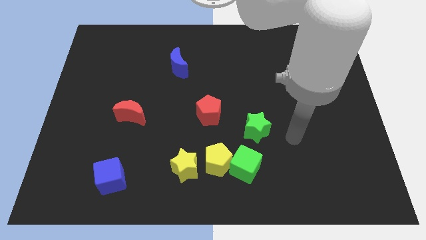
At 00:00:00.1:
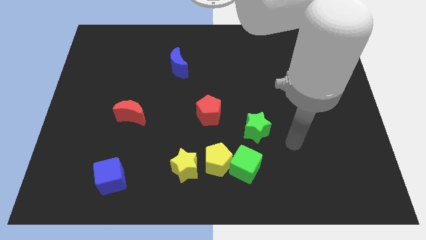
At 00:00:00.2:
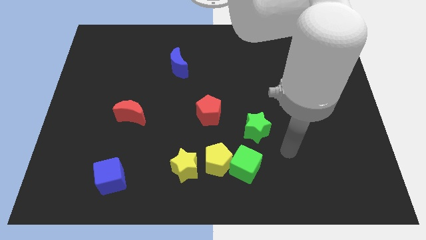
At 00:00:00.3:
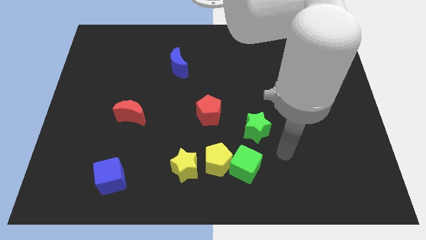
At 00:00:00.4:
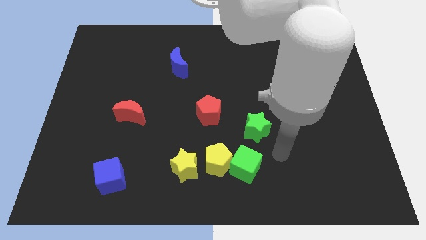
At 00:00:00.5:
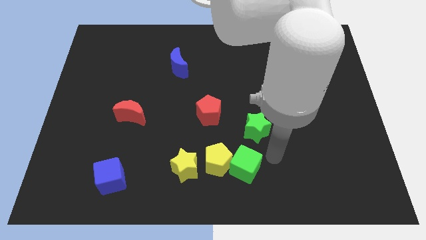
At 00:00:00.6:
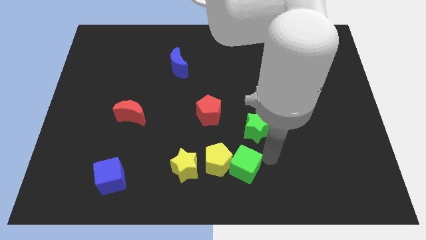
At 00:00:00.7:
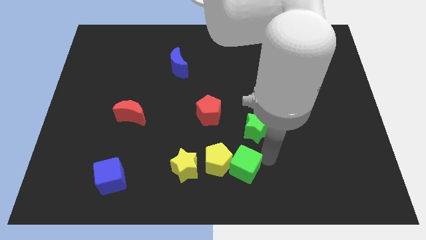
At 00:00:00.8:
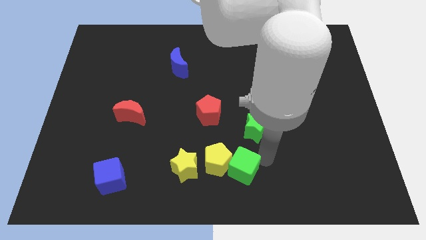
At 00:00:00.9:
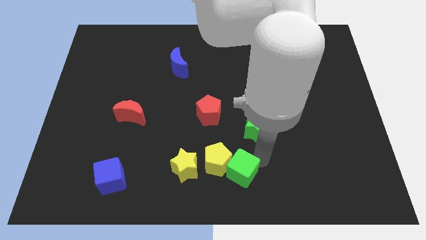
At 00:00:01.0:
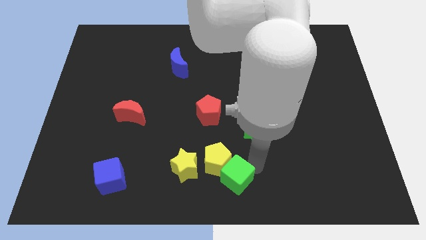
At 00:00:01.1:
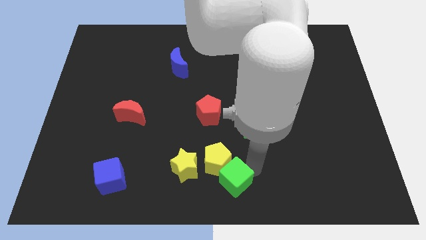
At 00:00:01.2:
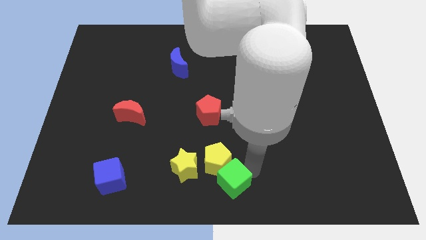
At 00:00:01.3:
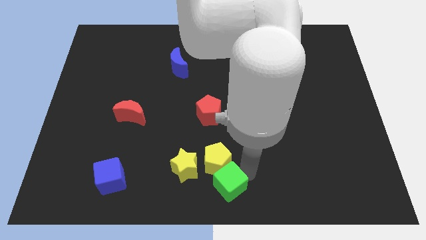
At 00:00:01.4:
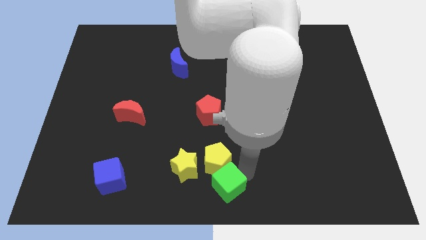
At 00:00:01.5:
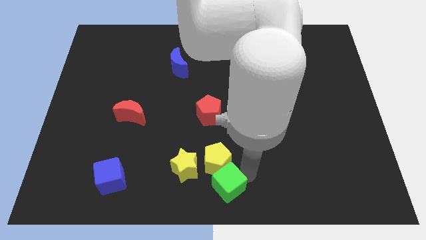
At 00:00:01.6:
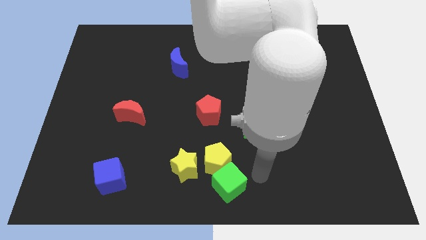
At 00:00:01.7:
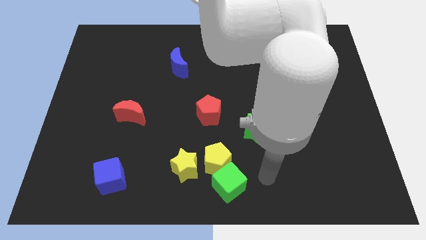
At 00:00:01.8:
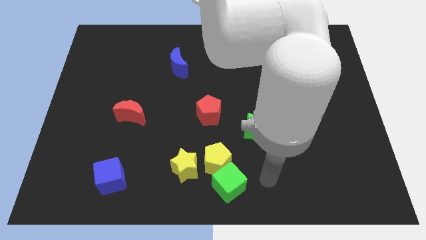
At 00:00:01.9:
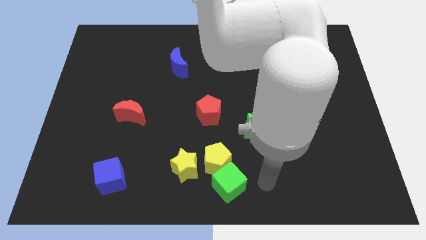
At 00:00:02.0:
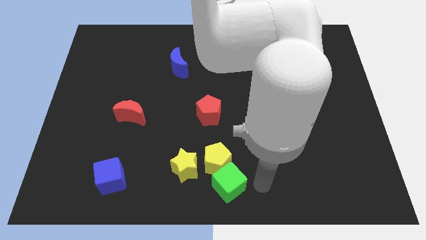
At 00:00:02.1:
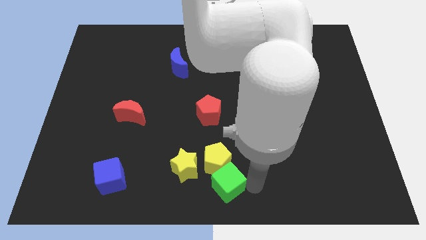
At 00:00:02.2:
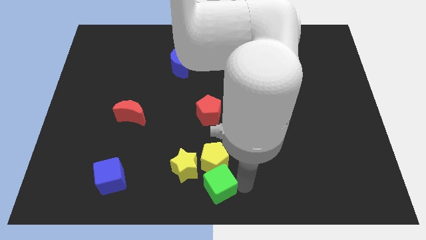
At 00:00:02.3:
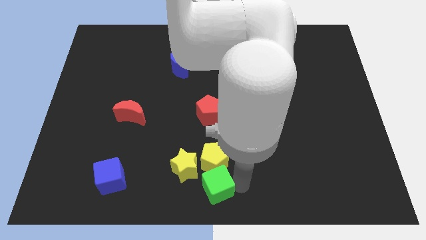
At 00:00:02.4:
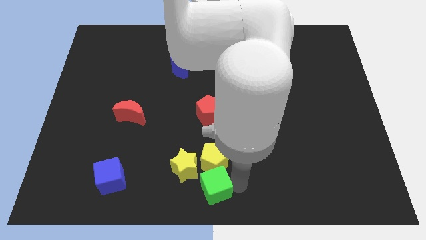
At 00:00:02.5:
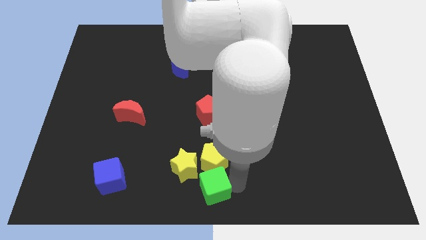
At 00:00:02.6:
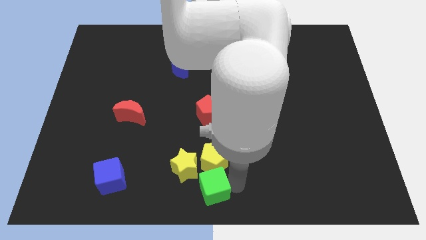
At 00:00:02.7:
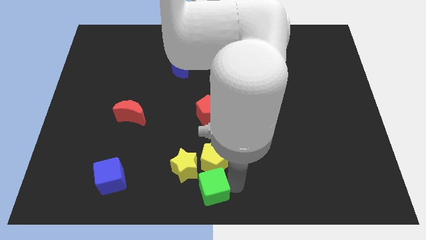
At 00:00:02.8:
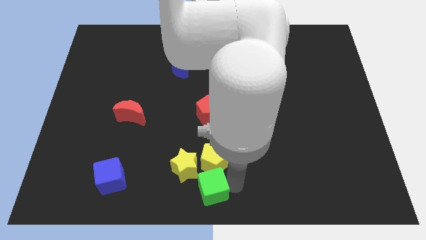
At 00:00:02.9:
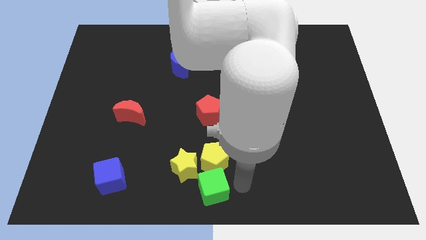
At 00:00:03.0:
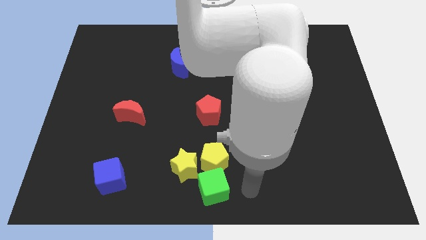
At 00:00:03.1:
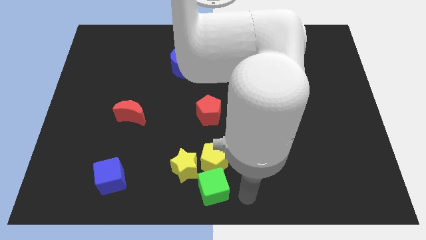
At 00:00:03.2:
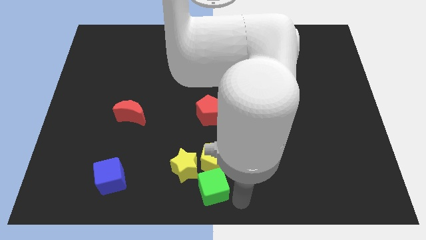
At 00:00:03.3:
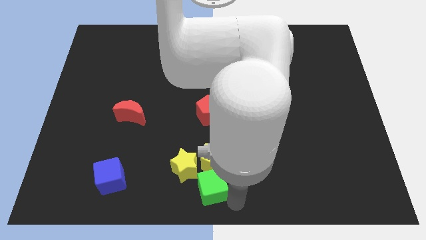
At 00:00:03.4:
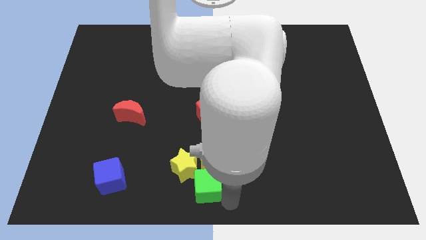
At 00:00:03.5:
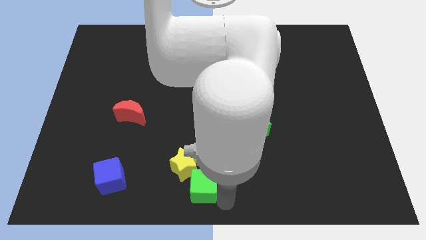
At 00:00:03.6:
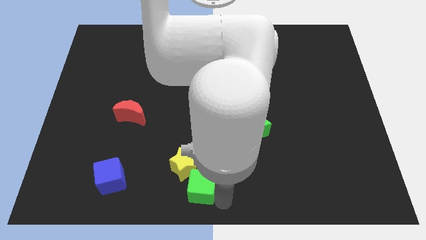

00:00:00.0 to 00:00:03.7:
put the green cube next to the yellow star

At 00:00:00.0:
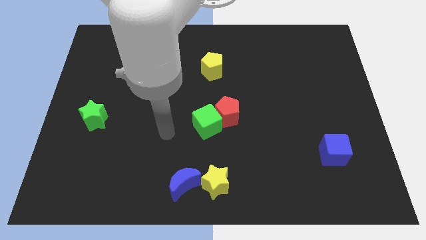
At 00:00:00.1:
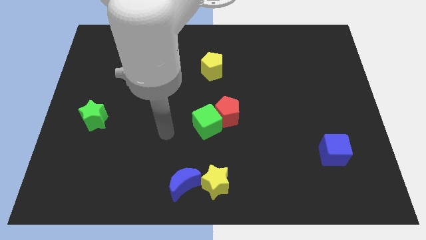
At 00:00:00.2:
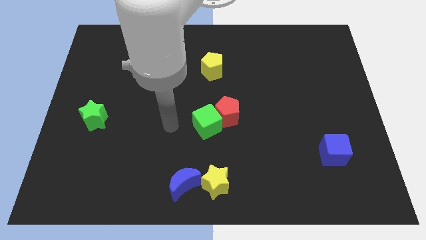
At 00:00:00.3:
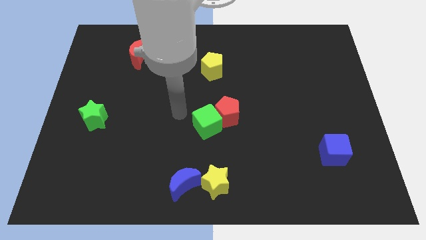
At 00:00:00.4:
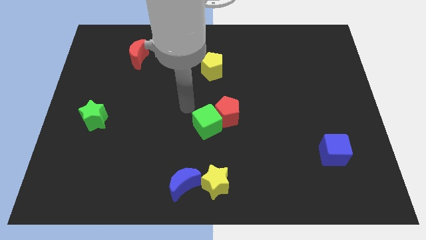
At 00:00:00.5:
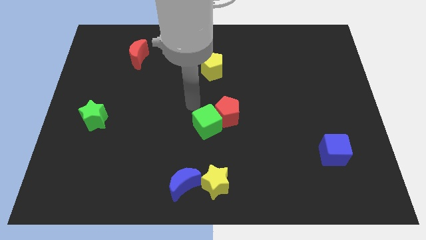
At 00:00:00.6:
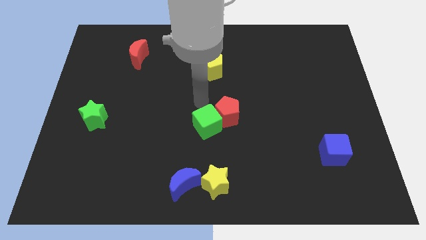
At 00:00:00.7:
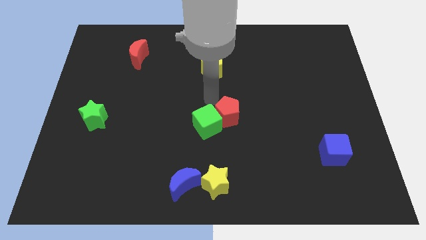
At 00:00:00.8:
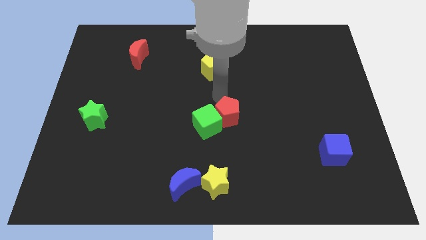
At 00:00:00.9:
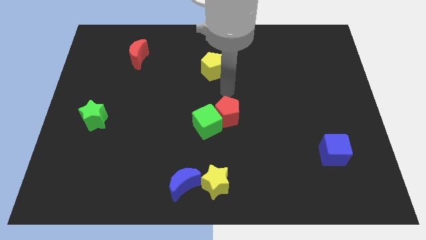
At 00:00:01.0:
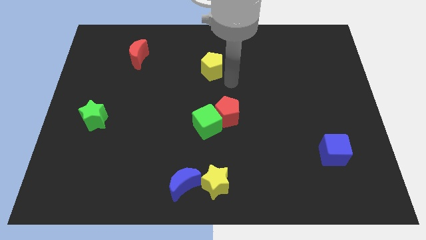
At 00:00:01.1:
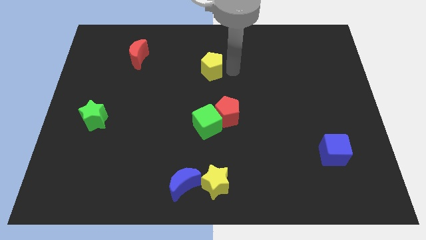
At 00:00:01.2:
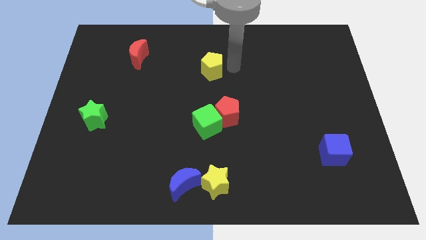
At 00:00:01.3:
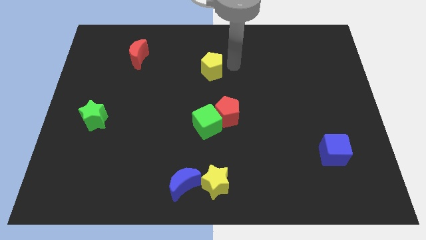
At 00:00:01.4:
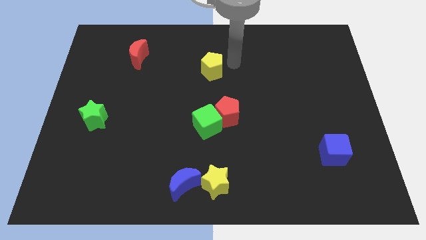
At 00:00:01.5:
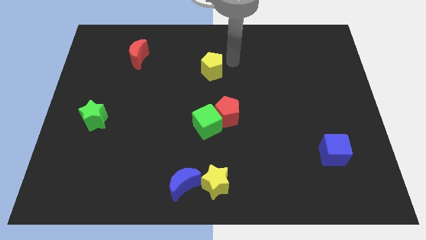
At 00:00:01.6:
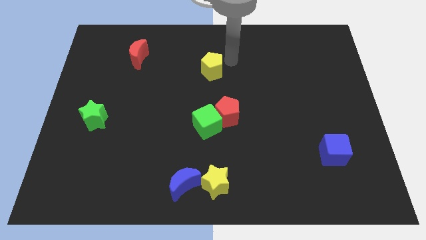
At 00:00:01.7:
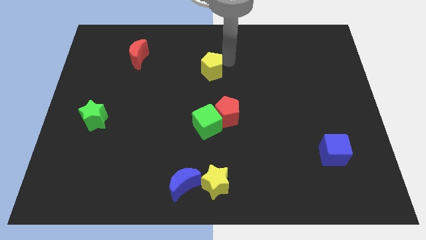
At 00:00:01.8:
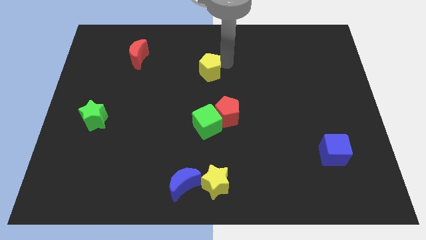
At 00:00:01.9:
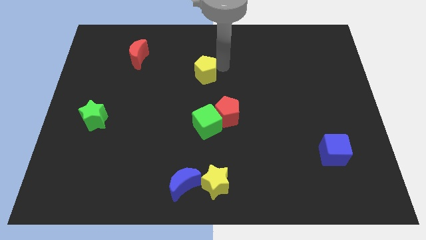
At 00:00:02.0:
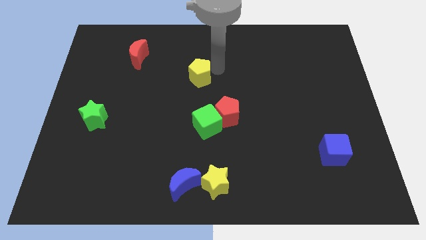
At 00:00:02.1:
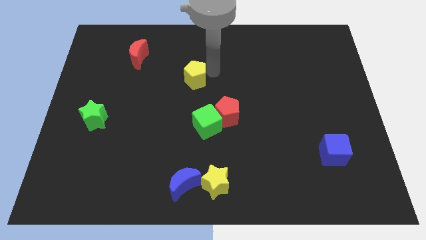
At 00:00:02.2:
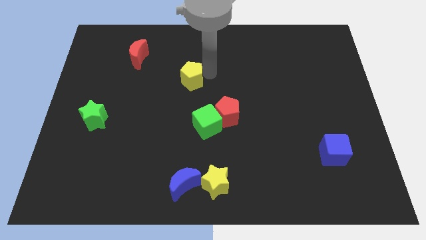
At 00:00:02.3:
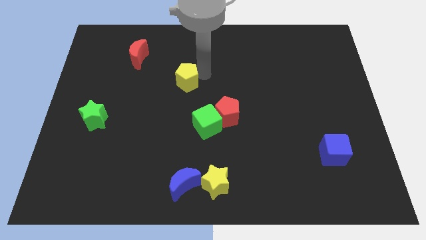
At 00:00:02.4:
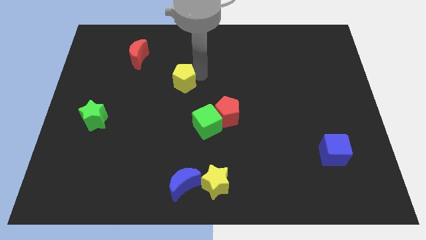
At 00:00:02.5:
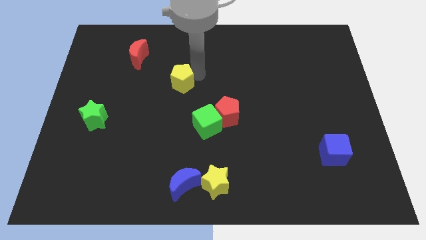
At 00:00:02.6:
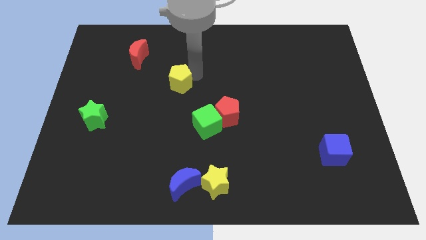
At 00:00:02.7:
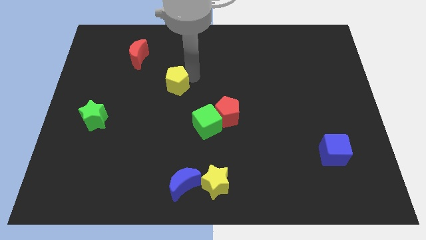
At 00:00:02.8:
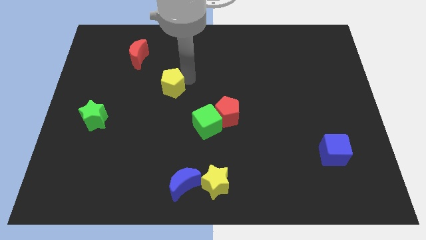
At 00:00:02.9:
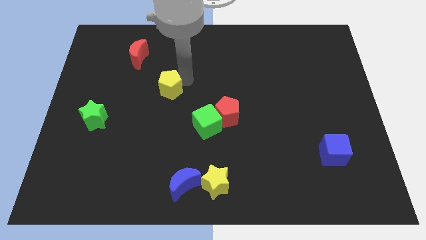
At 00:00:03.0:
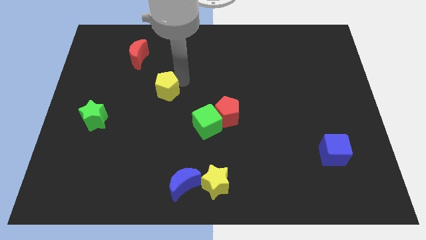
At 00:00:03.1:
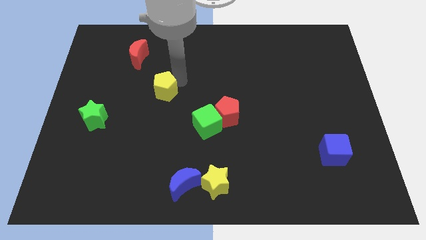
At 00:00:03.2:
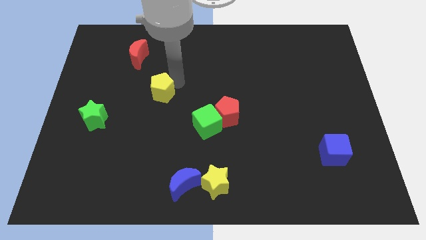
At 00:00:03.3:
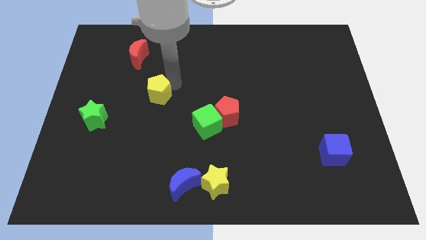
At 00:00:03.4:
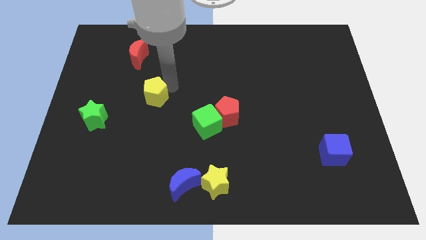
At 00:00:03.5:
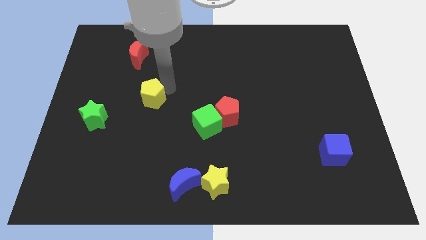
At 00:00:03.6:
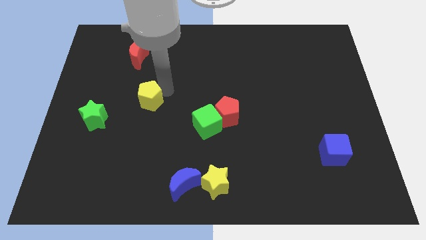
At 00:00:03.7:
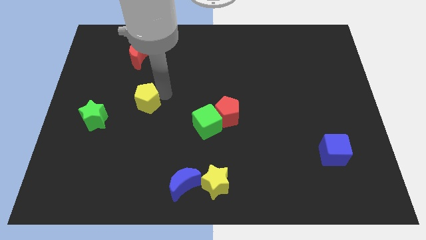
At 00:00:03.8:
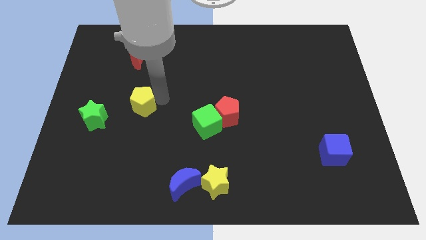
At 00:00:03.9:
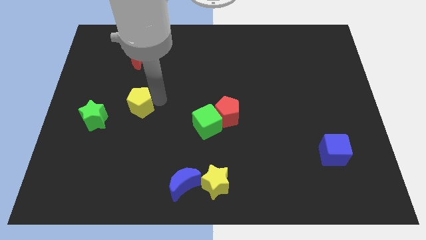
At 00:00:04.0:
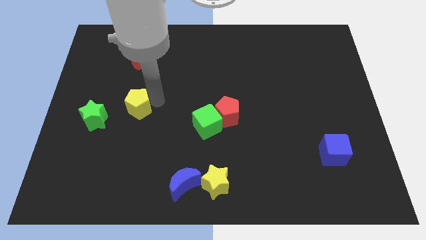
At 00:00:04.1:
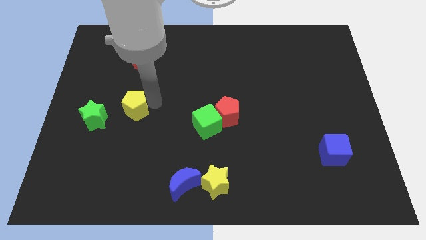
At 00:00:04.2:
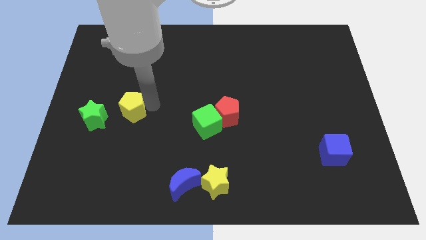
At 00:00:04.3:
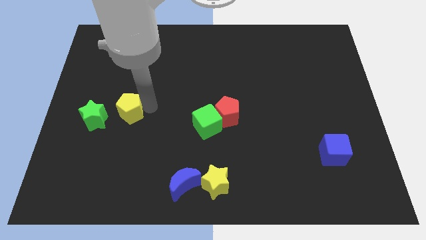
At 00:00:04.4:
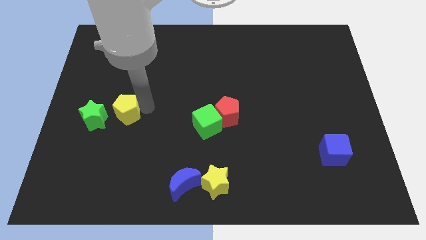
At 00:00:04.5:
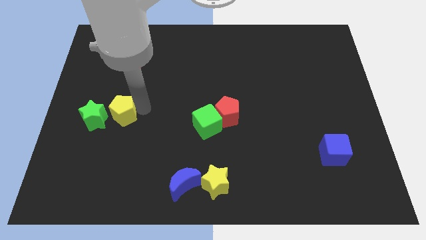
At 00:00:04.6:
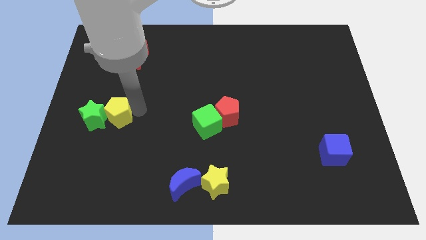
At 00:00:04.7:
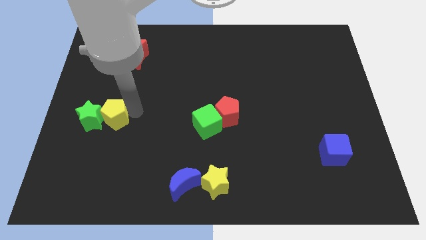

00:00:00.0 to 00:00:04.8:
put the yellow pentagon next to the green star
